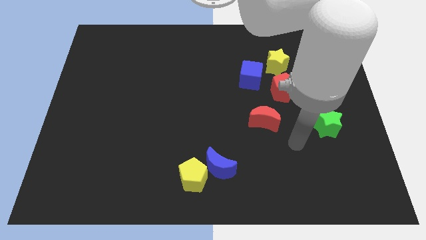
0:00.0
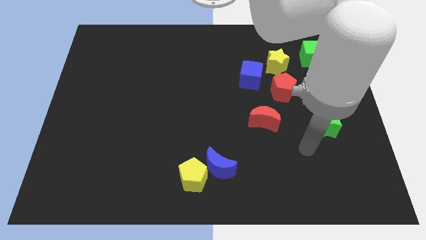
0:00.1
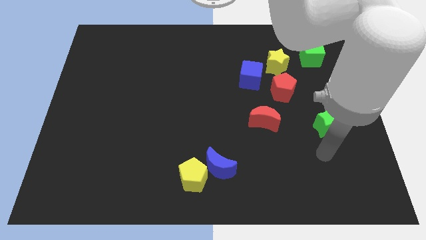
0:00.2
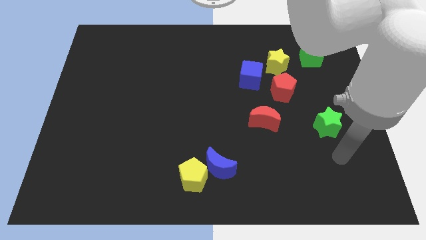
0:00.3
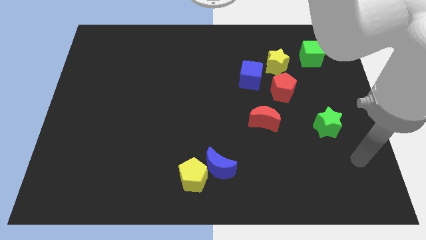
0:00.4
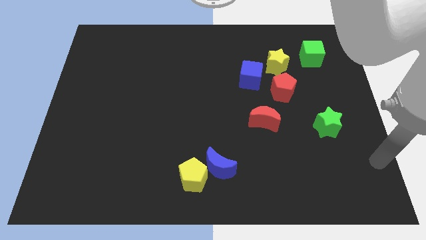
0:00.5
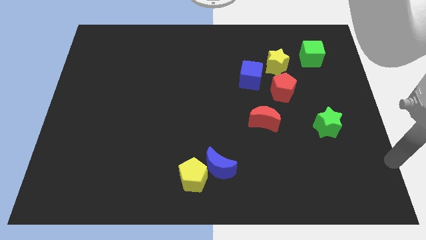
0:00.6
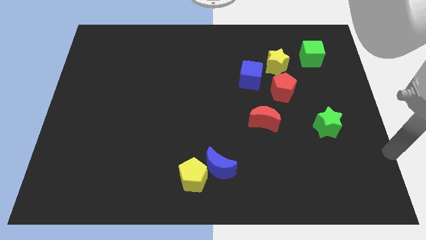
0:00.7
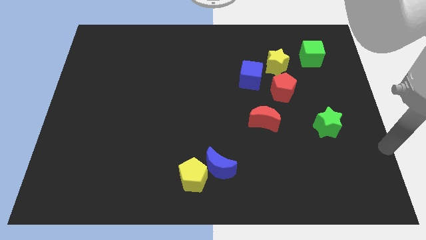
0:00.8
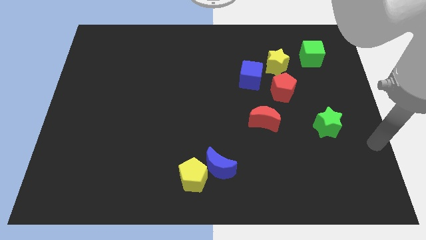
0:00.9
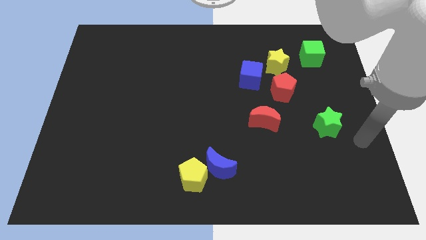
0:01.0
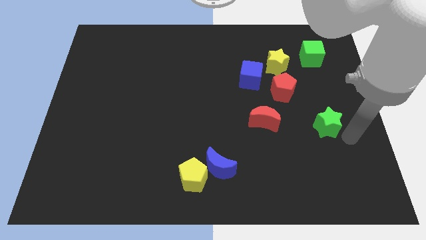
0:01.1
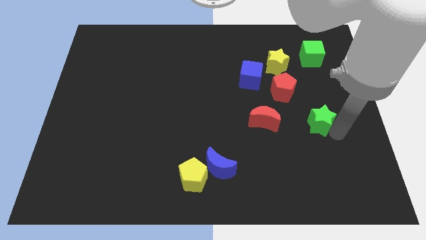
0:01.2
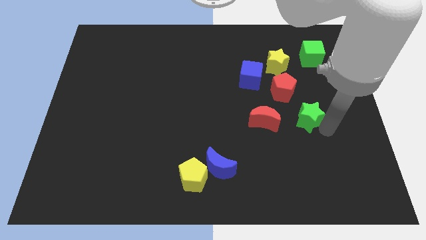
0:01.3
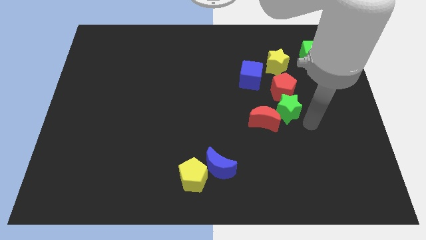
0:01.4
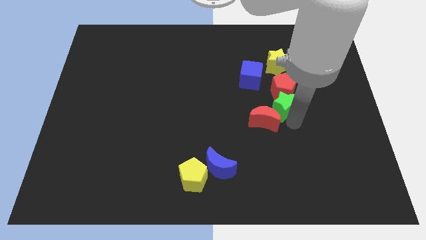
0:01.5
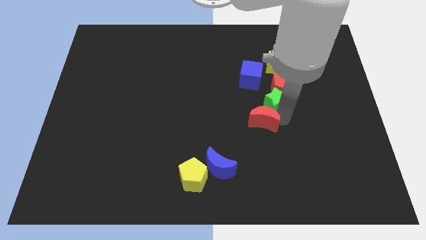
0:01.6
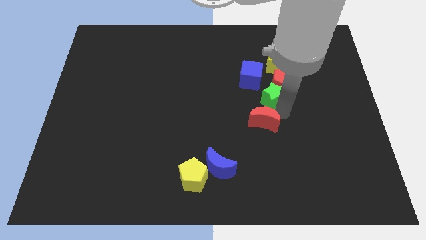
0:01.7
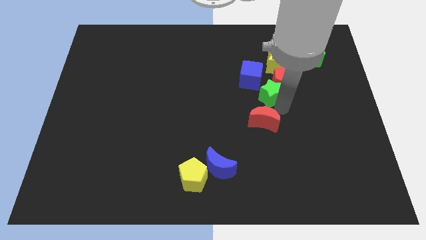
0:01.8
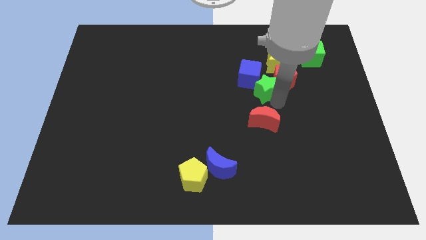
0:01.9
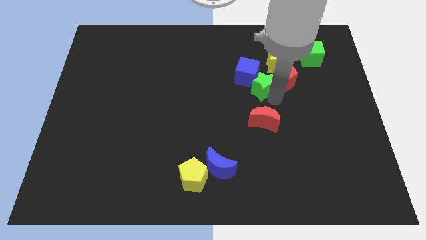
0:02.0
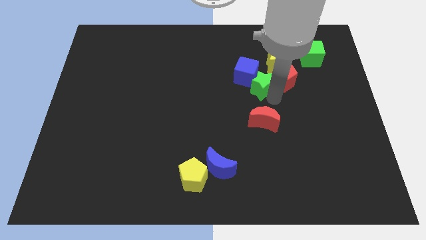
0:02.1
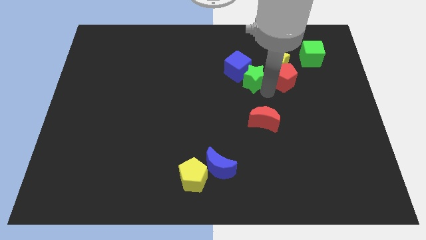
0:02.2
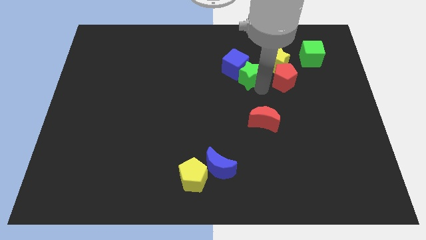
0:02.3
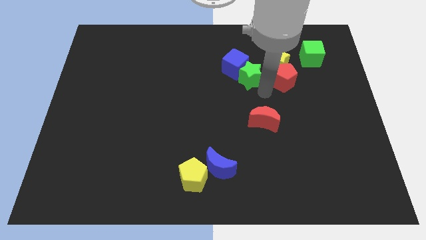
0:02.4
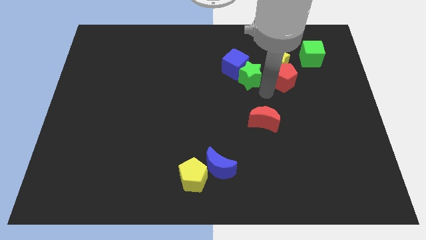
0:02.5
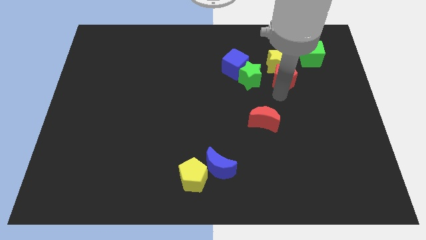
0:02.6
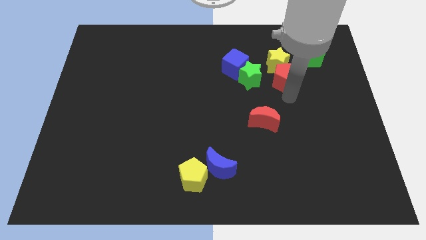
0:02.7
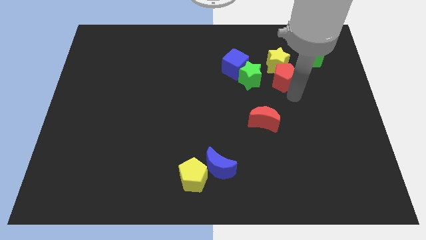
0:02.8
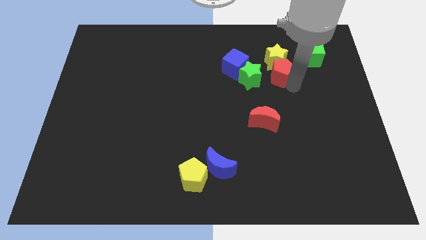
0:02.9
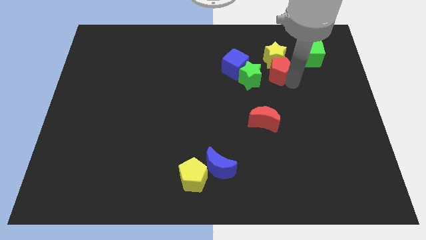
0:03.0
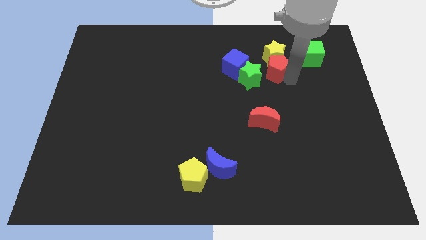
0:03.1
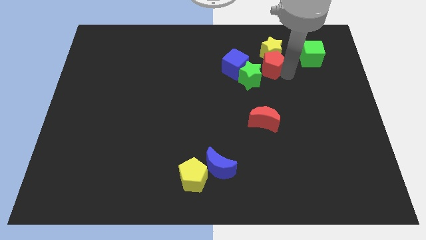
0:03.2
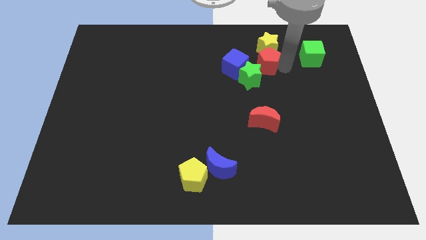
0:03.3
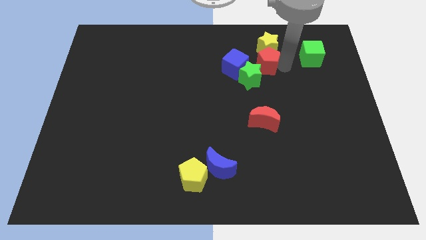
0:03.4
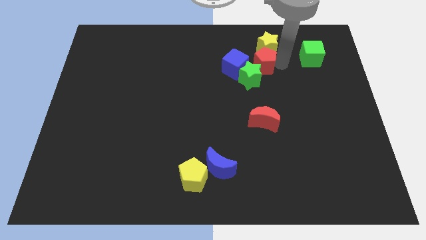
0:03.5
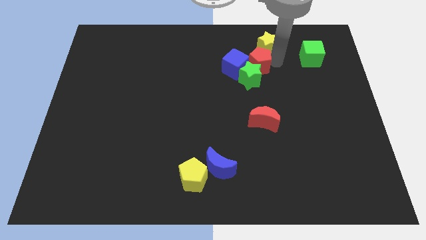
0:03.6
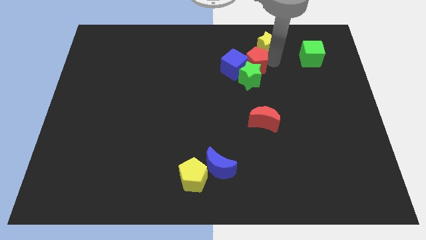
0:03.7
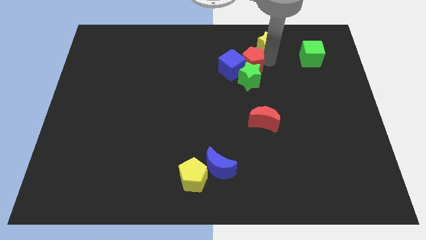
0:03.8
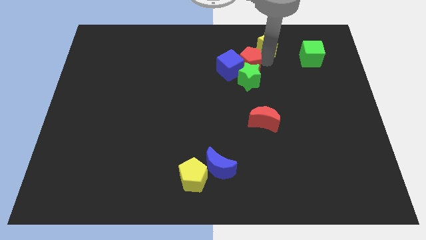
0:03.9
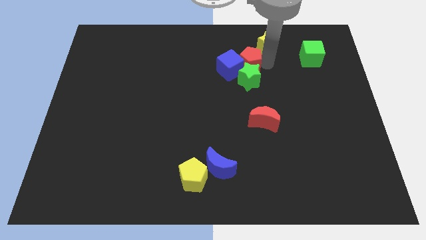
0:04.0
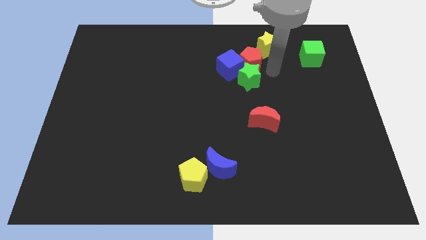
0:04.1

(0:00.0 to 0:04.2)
place the red pentagon above the green star

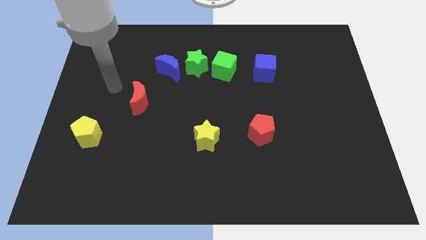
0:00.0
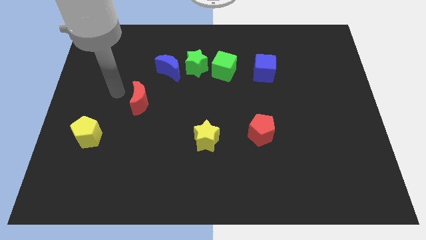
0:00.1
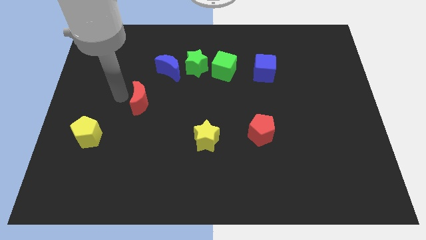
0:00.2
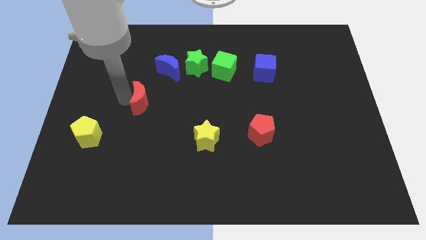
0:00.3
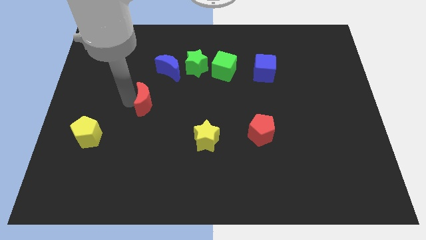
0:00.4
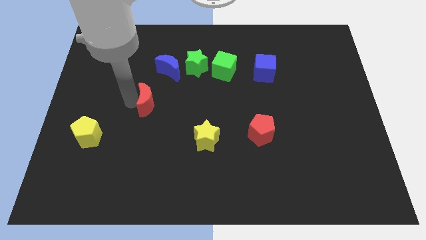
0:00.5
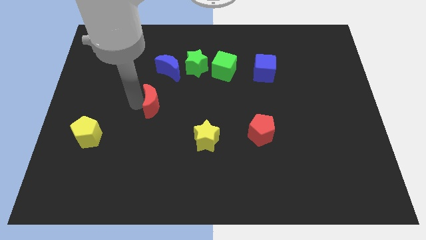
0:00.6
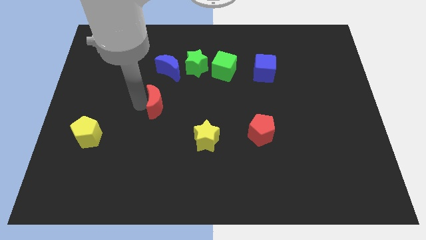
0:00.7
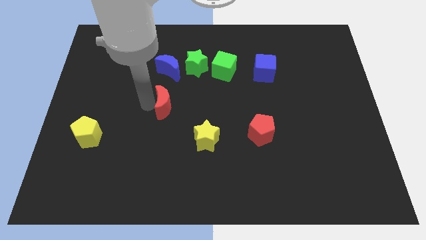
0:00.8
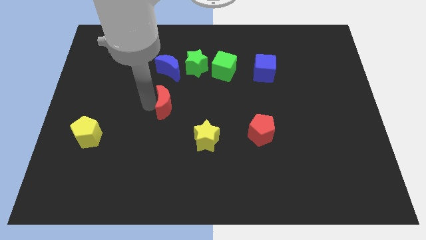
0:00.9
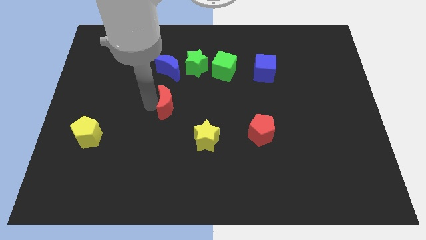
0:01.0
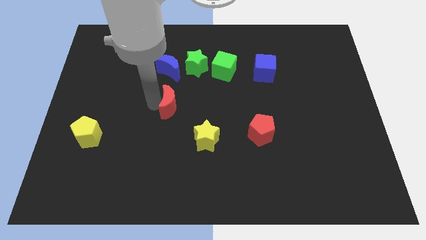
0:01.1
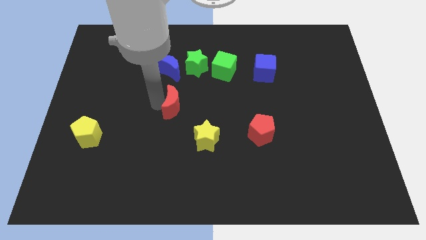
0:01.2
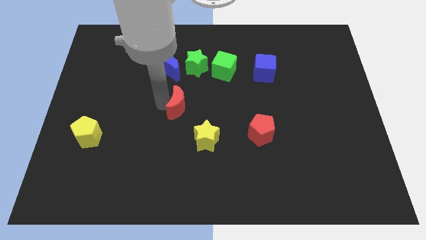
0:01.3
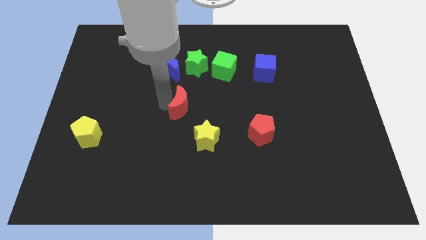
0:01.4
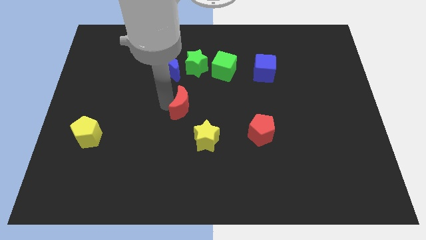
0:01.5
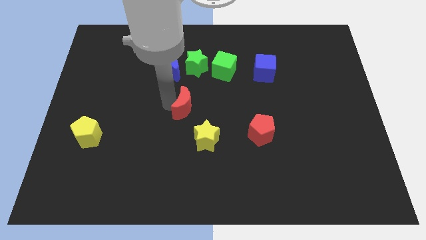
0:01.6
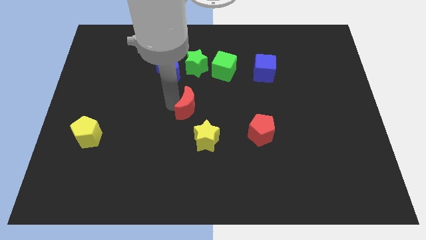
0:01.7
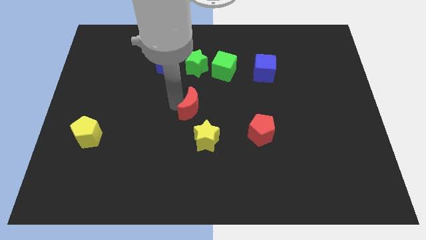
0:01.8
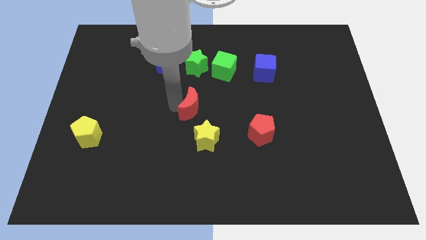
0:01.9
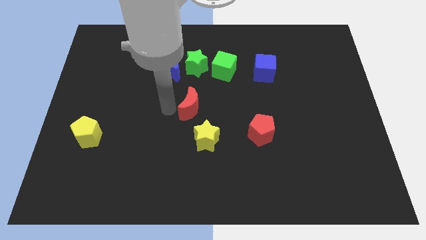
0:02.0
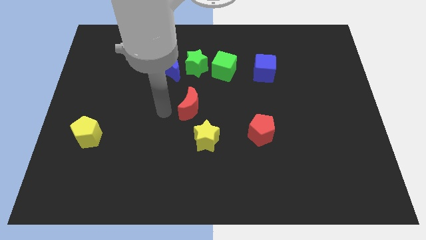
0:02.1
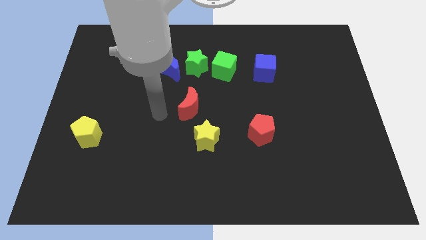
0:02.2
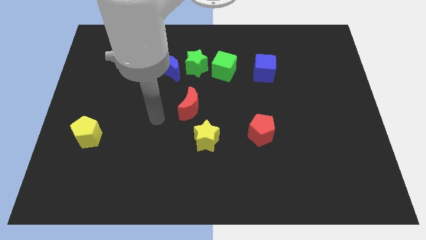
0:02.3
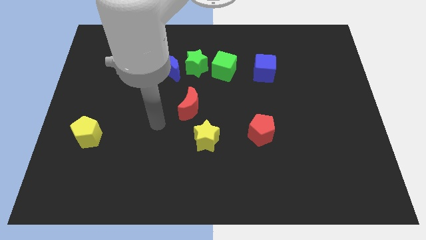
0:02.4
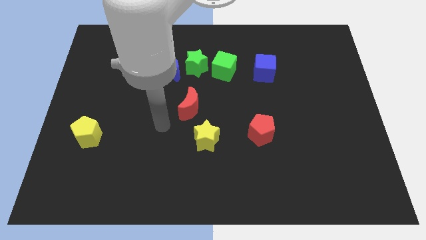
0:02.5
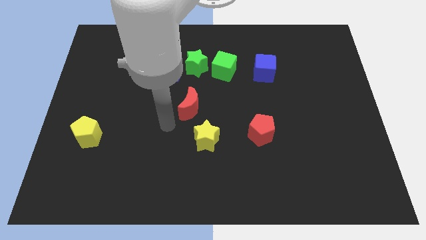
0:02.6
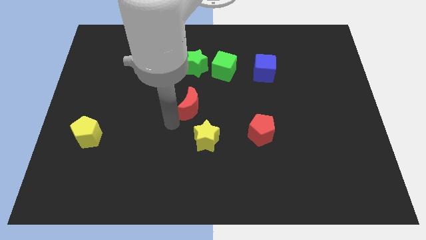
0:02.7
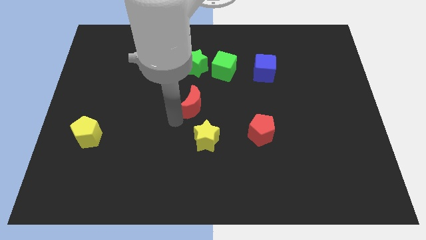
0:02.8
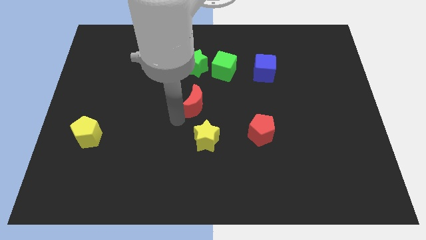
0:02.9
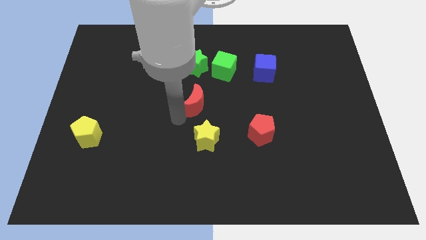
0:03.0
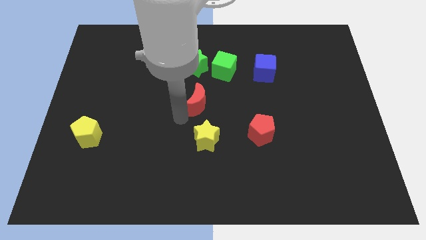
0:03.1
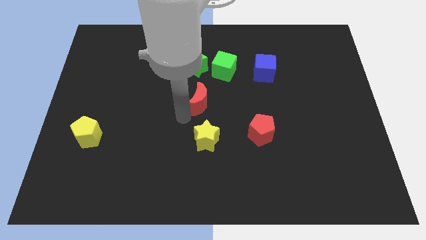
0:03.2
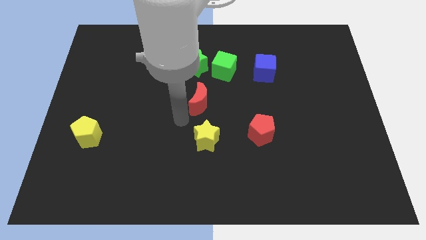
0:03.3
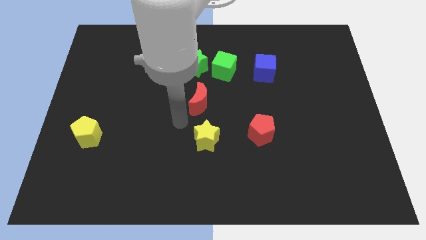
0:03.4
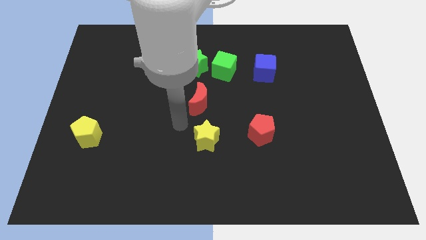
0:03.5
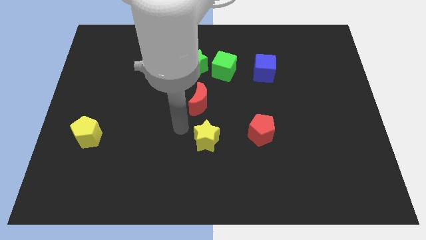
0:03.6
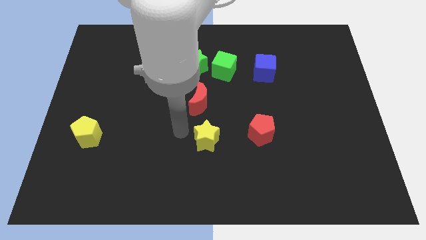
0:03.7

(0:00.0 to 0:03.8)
move the red crescent to the center of the board

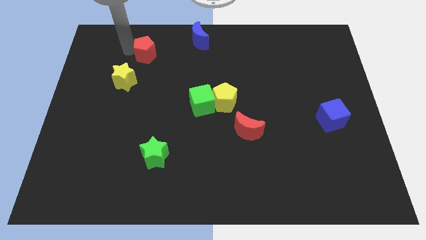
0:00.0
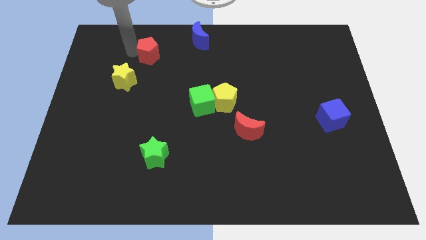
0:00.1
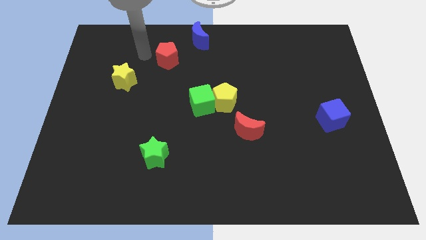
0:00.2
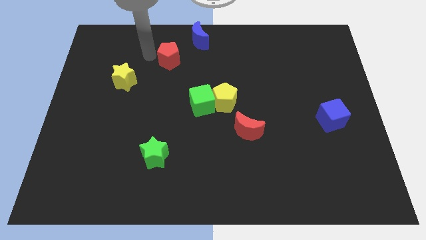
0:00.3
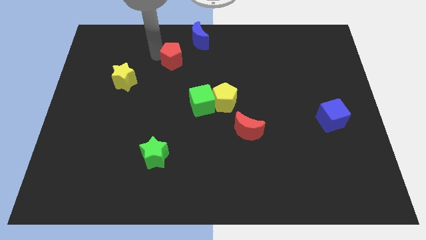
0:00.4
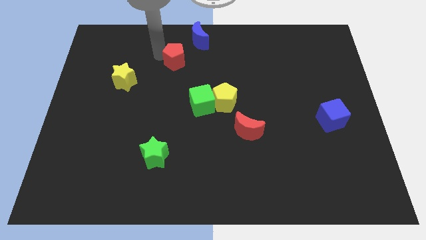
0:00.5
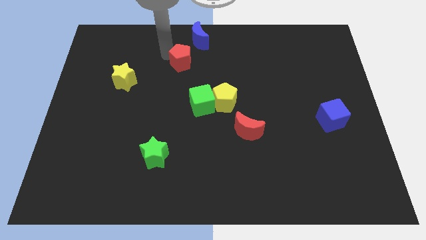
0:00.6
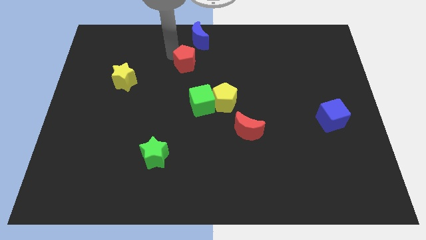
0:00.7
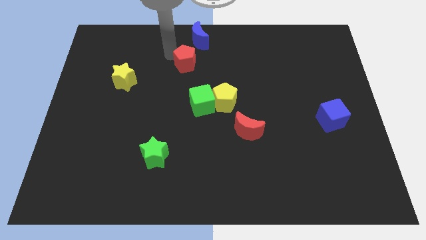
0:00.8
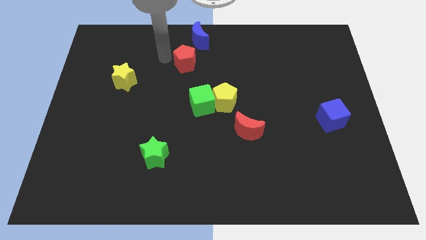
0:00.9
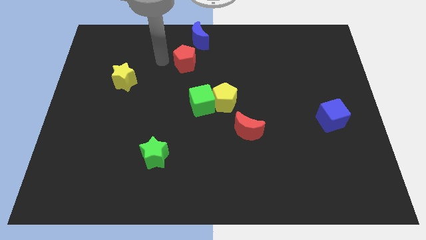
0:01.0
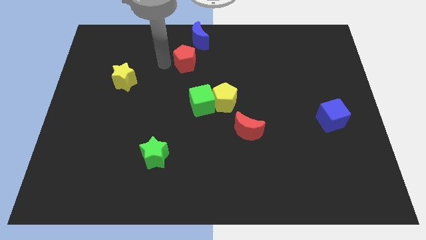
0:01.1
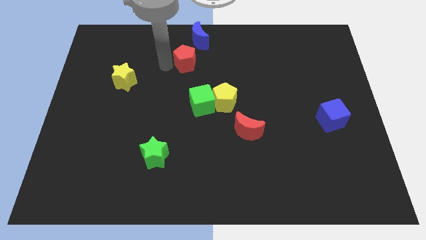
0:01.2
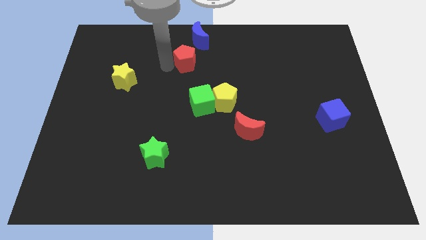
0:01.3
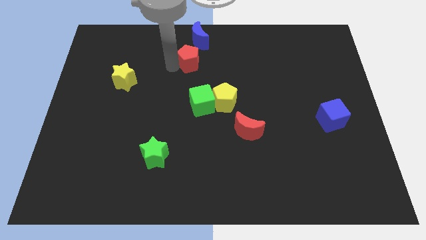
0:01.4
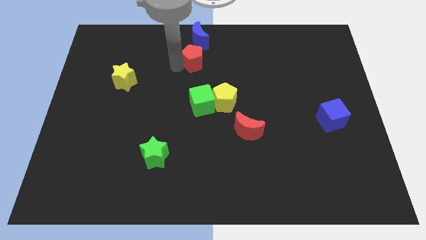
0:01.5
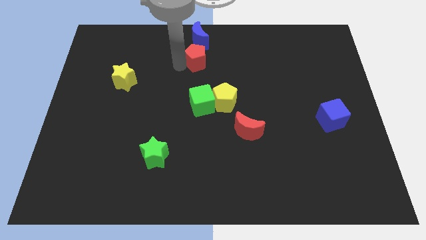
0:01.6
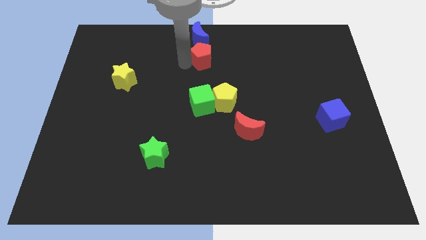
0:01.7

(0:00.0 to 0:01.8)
place the red pentagon below the blue moon
